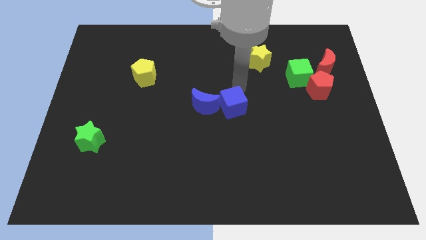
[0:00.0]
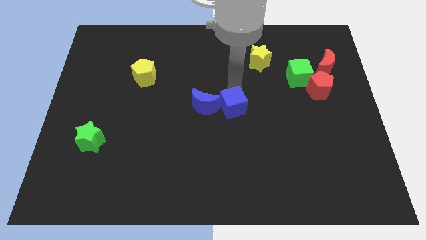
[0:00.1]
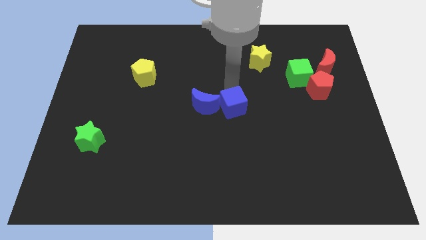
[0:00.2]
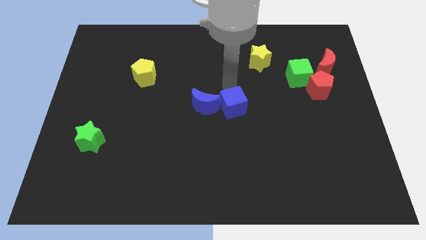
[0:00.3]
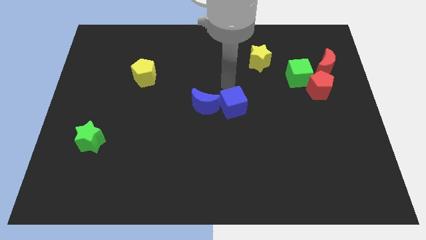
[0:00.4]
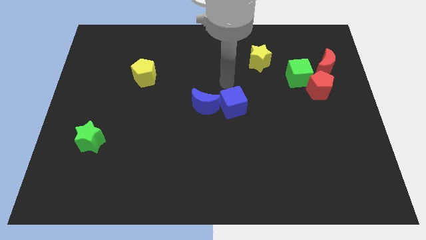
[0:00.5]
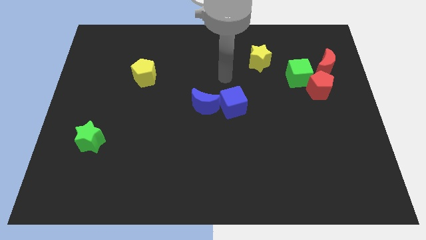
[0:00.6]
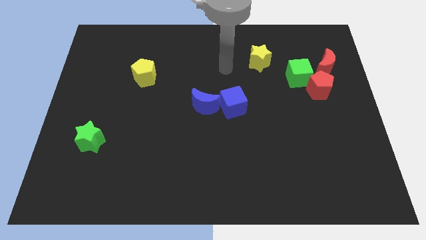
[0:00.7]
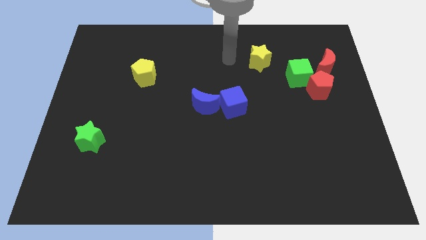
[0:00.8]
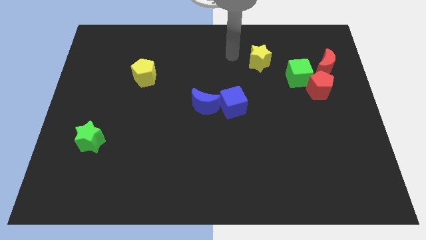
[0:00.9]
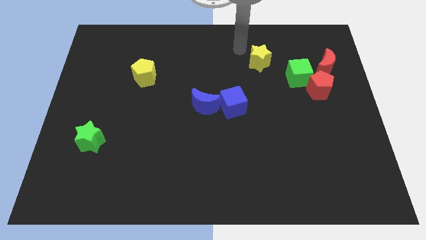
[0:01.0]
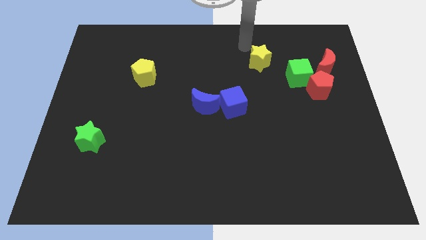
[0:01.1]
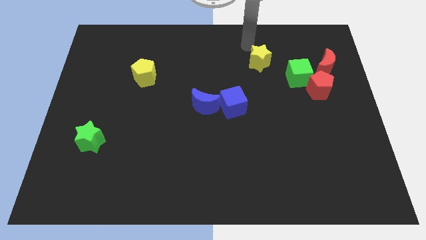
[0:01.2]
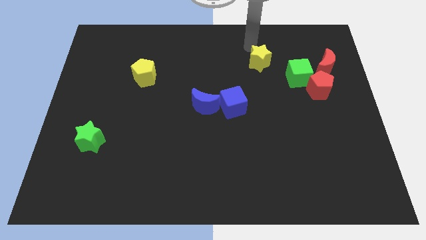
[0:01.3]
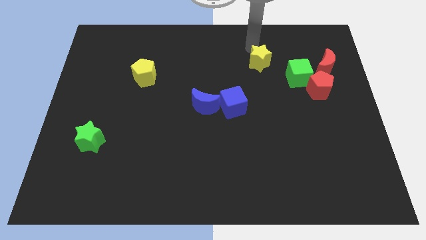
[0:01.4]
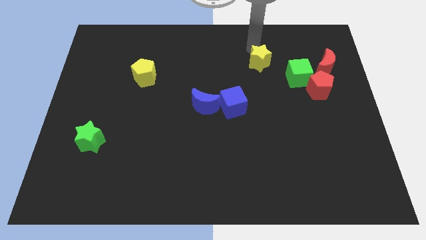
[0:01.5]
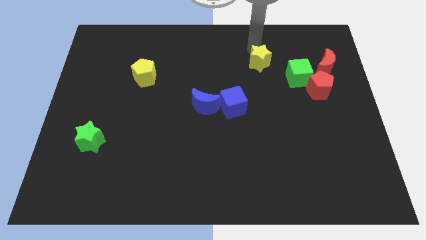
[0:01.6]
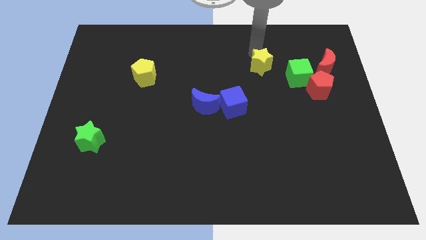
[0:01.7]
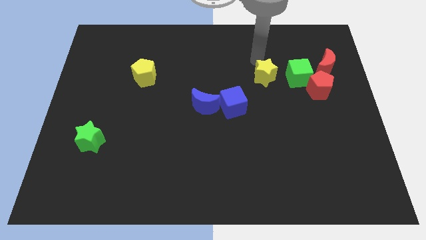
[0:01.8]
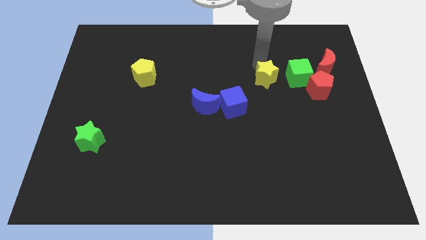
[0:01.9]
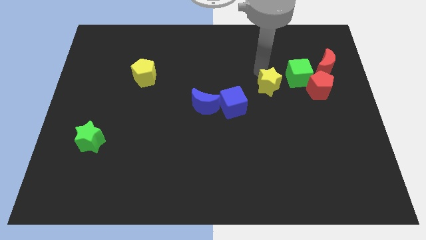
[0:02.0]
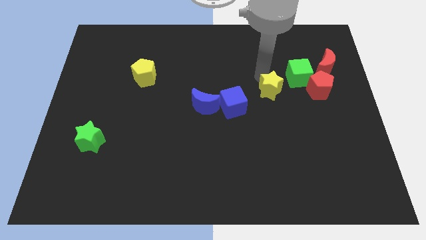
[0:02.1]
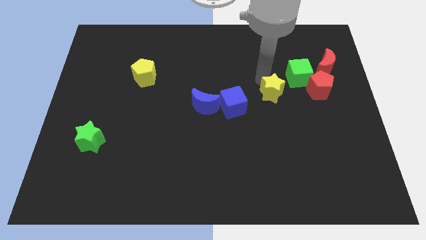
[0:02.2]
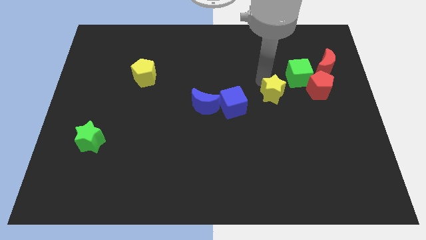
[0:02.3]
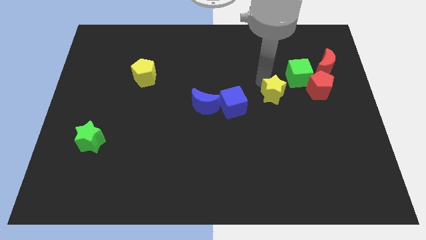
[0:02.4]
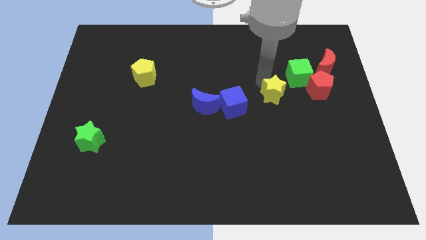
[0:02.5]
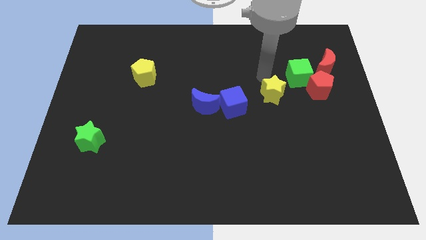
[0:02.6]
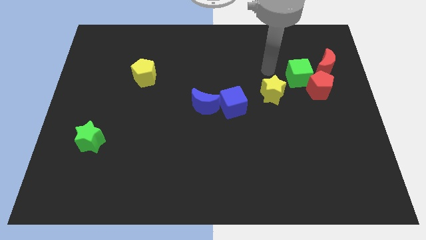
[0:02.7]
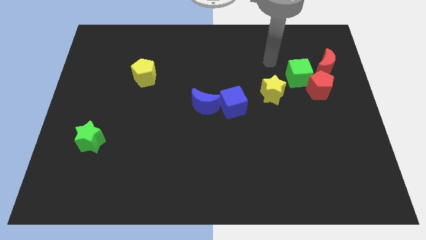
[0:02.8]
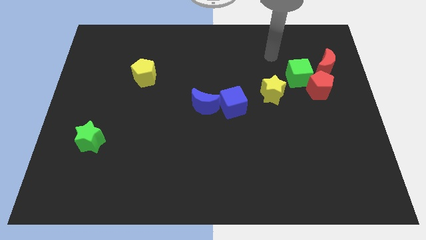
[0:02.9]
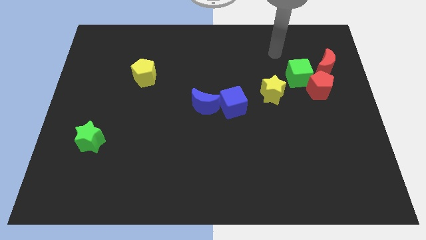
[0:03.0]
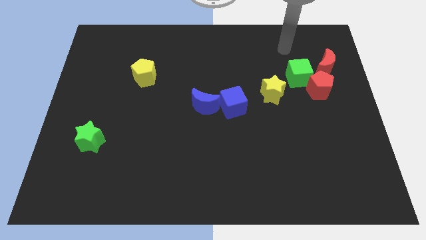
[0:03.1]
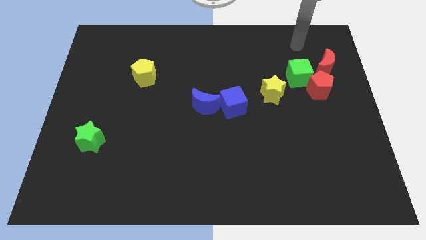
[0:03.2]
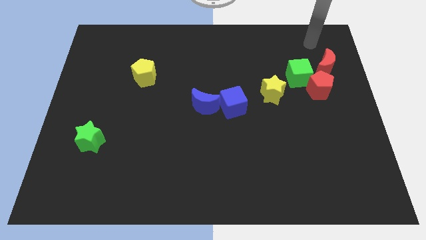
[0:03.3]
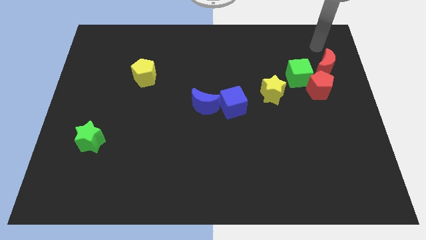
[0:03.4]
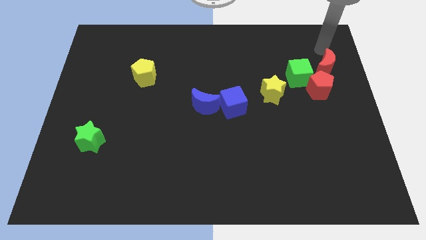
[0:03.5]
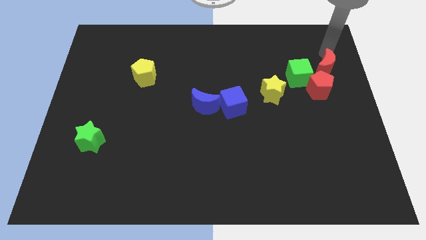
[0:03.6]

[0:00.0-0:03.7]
push the yellow star to the right of the blue cube

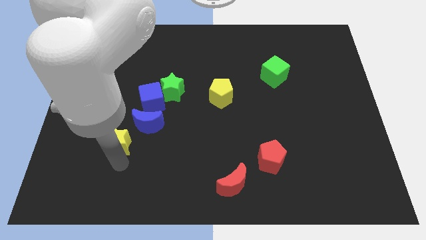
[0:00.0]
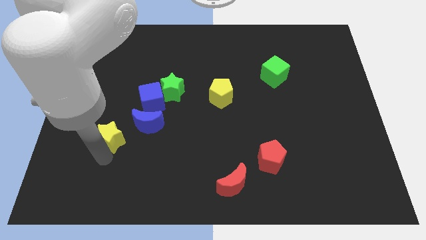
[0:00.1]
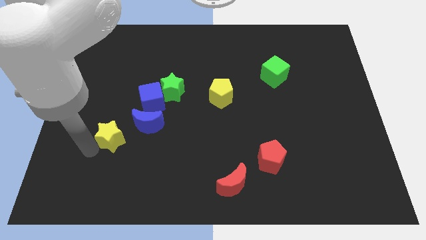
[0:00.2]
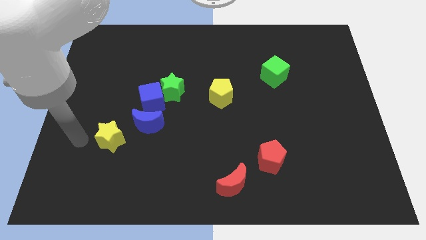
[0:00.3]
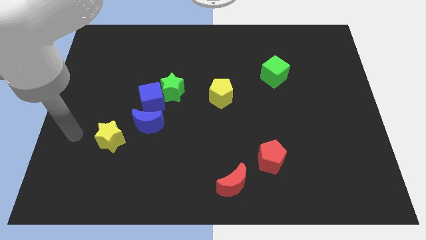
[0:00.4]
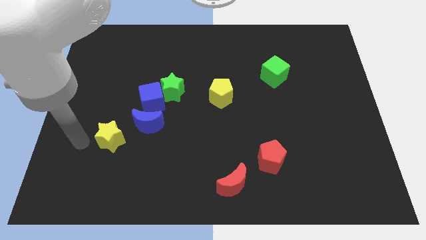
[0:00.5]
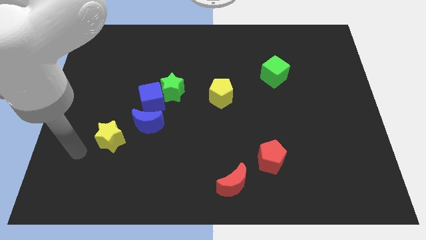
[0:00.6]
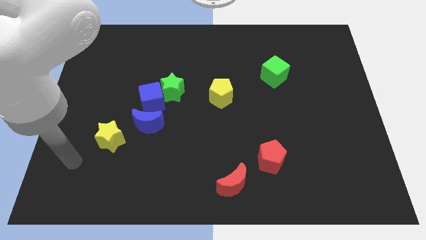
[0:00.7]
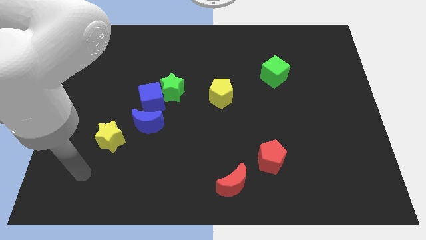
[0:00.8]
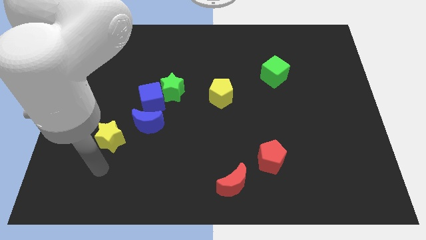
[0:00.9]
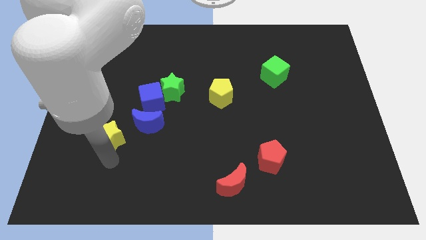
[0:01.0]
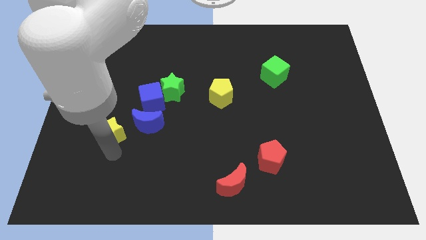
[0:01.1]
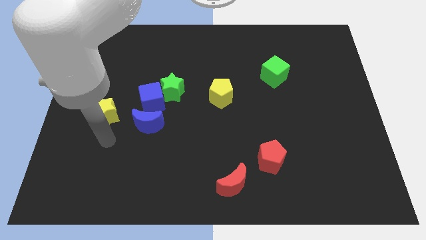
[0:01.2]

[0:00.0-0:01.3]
slide the yellow star to the left side of the blue moon

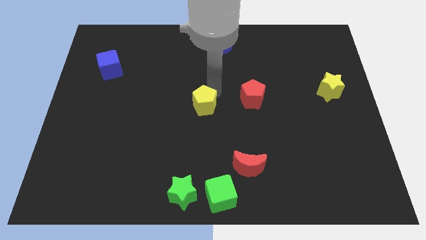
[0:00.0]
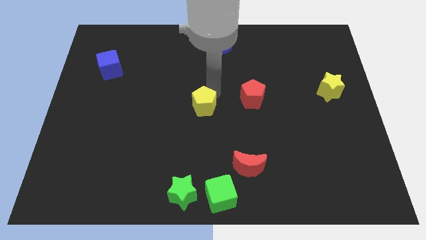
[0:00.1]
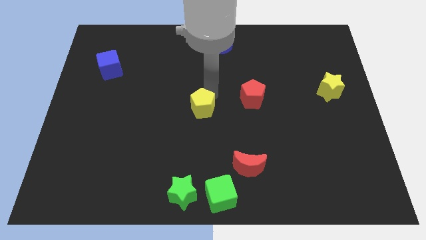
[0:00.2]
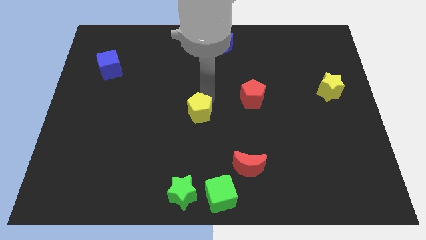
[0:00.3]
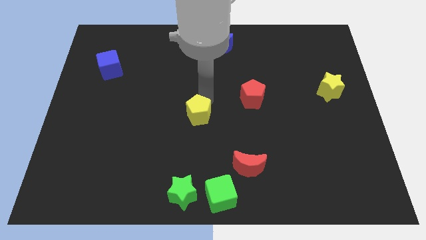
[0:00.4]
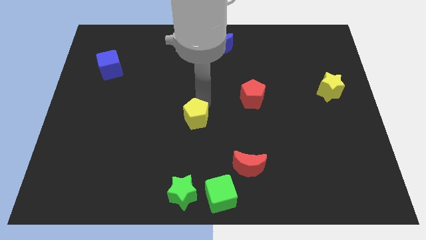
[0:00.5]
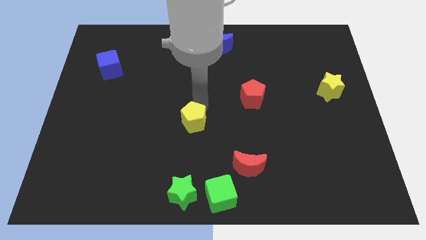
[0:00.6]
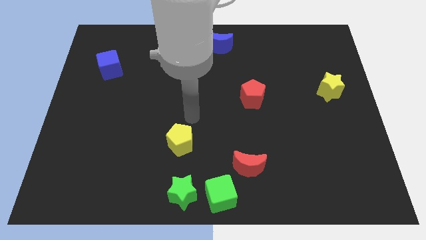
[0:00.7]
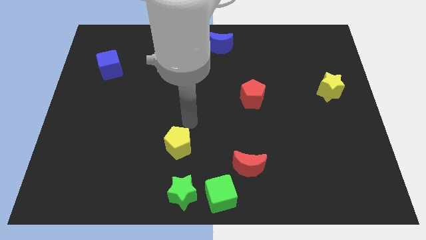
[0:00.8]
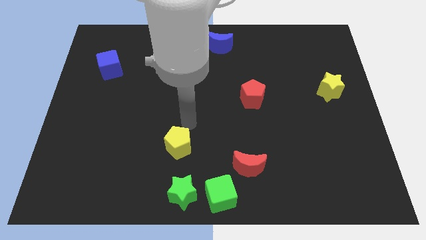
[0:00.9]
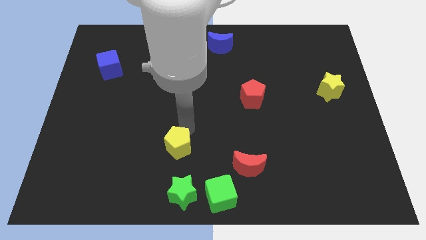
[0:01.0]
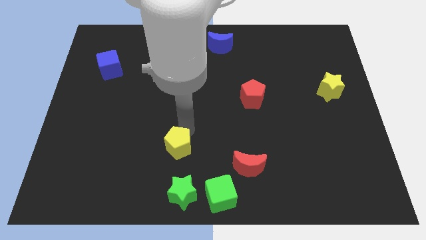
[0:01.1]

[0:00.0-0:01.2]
move yellow pentagon towards green star

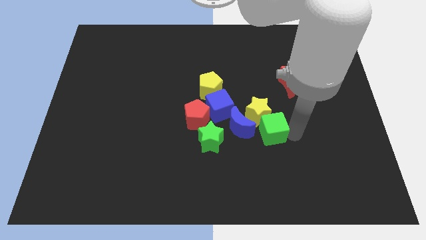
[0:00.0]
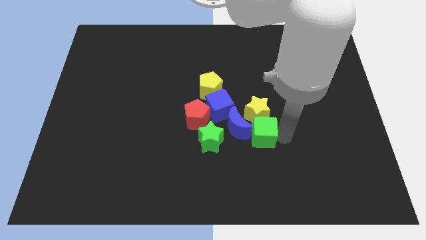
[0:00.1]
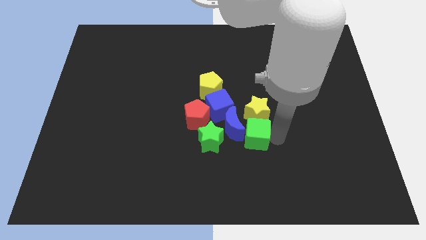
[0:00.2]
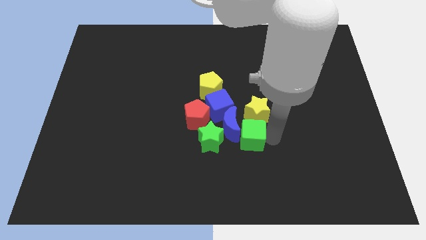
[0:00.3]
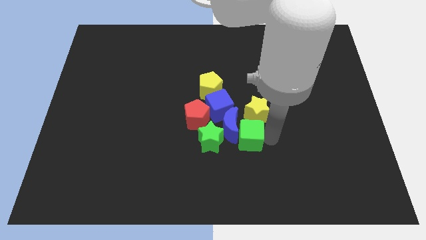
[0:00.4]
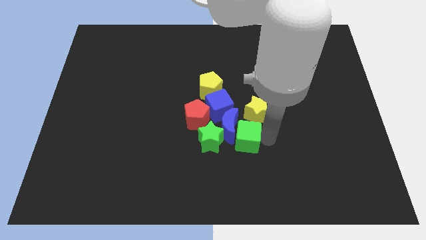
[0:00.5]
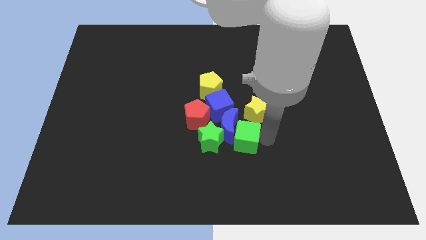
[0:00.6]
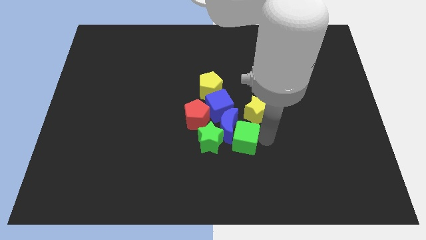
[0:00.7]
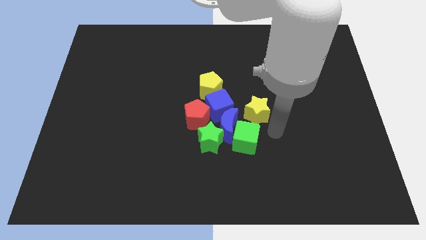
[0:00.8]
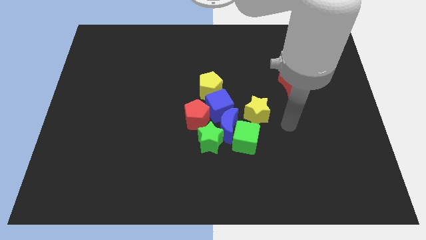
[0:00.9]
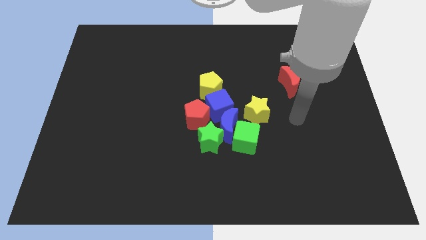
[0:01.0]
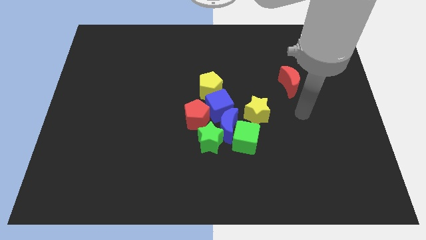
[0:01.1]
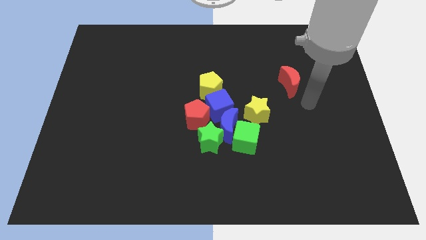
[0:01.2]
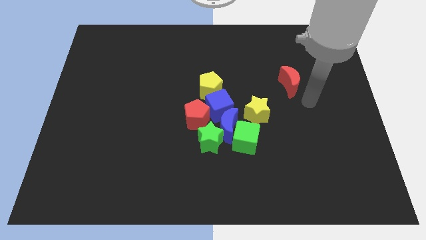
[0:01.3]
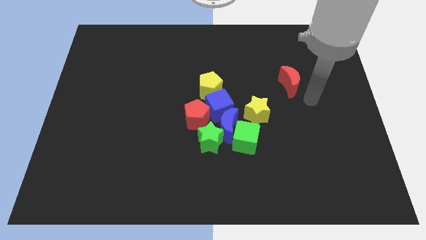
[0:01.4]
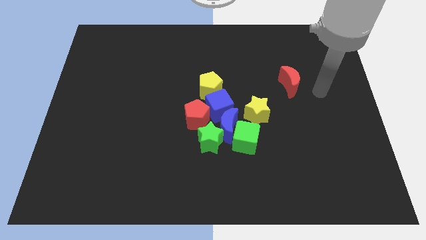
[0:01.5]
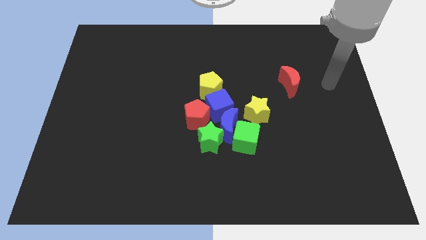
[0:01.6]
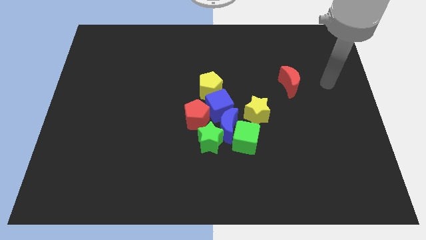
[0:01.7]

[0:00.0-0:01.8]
push the green cube to the right side of the blue moon

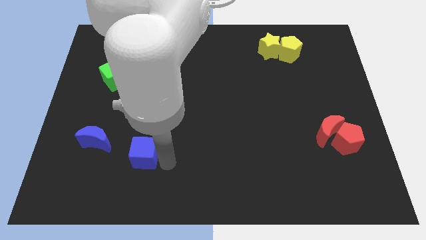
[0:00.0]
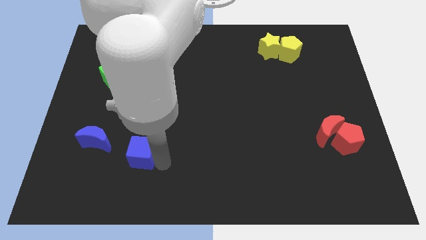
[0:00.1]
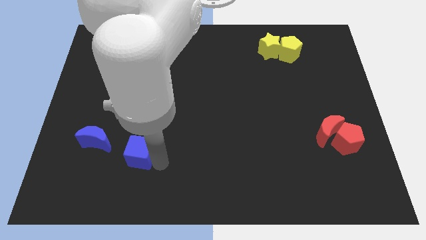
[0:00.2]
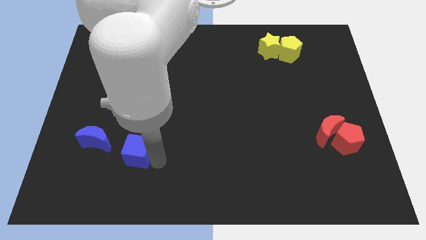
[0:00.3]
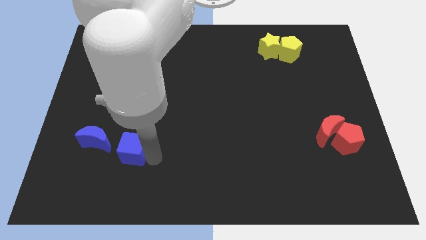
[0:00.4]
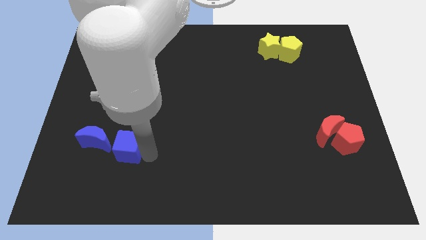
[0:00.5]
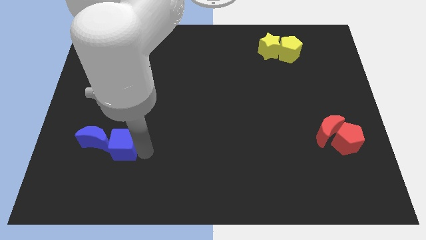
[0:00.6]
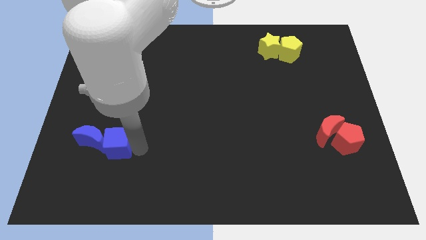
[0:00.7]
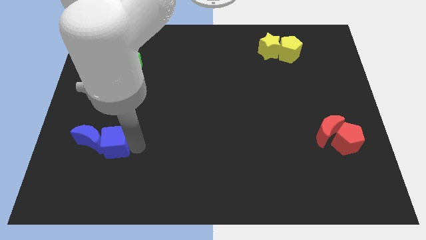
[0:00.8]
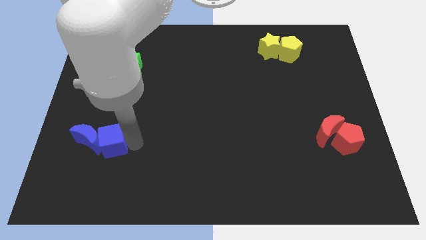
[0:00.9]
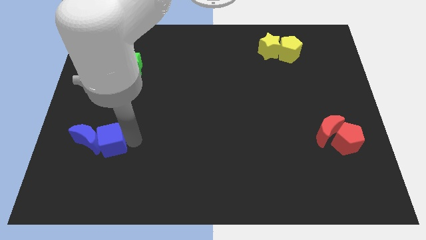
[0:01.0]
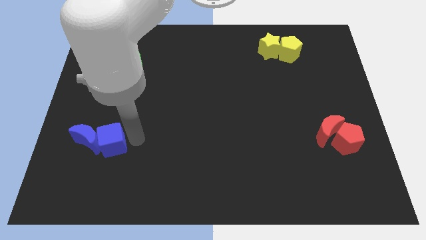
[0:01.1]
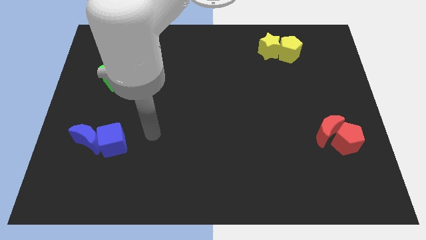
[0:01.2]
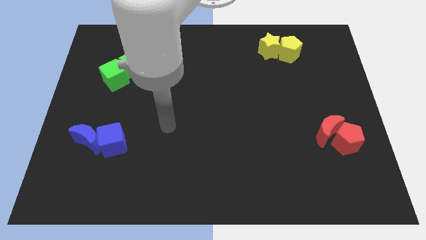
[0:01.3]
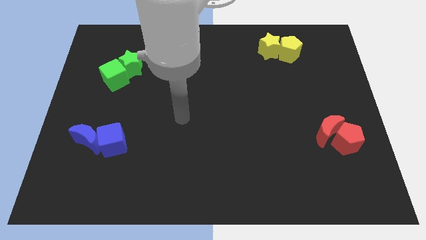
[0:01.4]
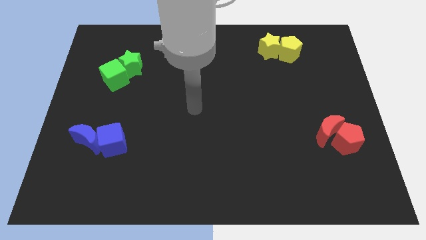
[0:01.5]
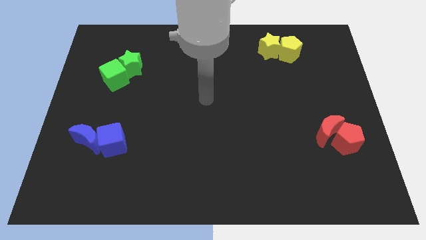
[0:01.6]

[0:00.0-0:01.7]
move the blue cube into the blue moon
